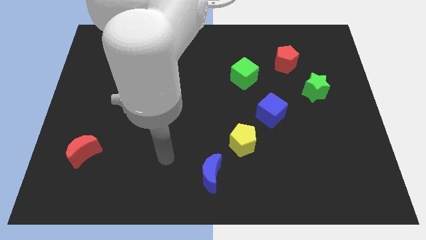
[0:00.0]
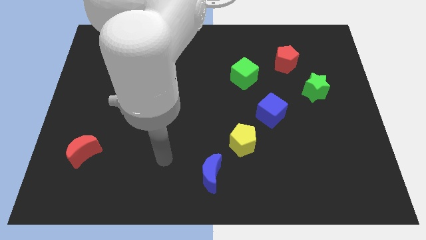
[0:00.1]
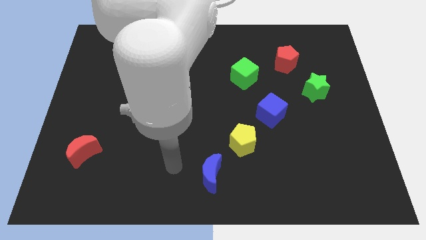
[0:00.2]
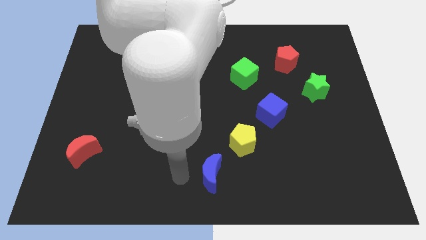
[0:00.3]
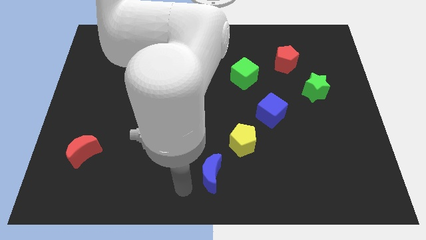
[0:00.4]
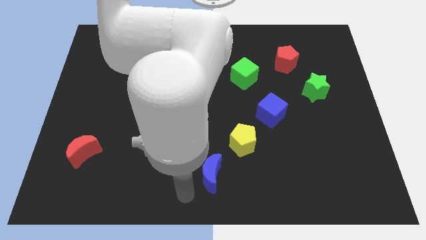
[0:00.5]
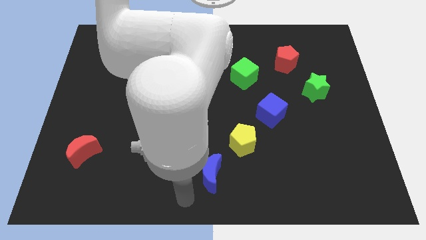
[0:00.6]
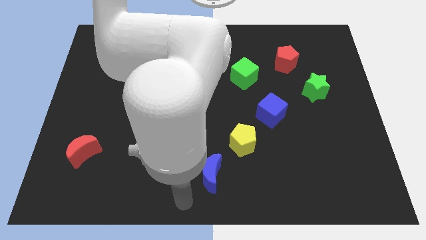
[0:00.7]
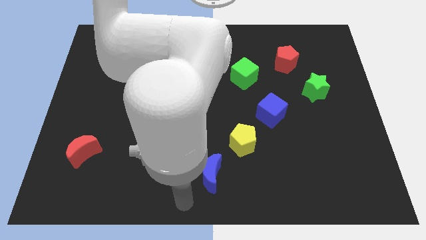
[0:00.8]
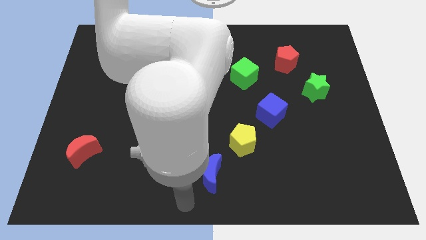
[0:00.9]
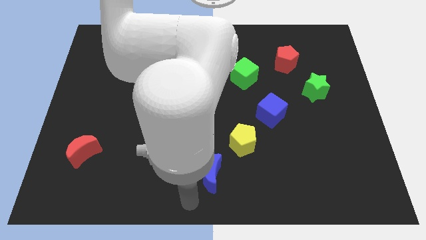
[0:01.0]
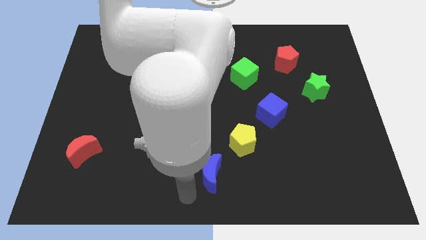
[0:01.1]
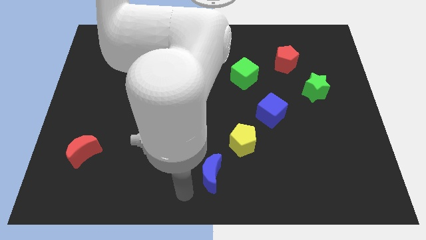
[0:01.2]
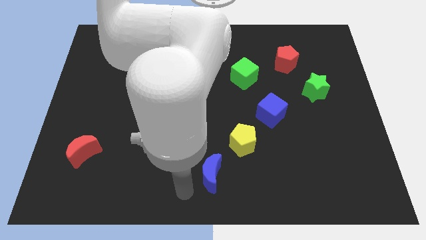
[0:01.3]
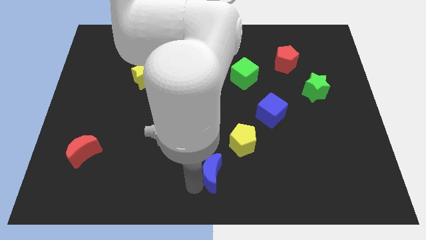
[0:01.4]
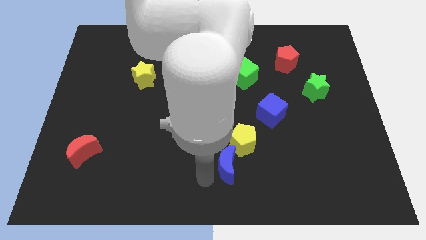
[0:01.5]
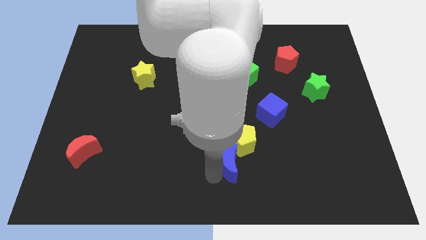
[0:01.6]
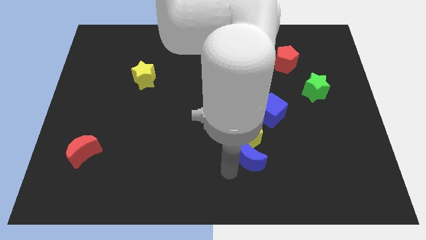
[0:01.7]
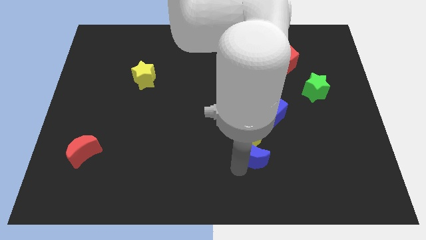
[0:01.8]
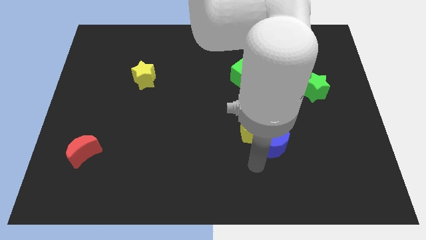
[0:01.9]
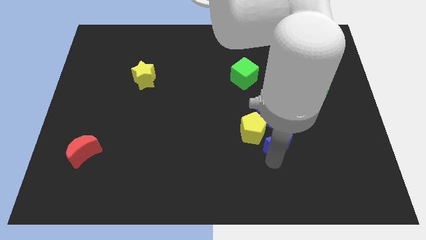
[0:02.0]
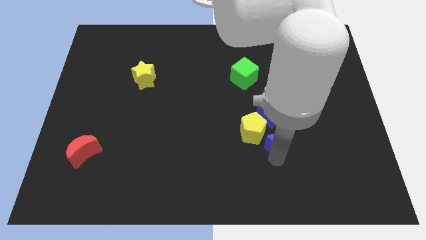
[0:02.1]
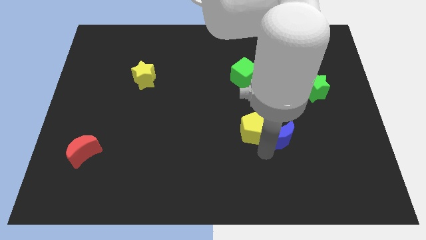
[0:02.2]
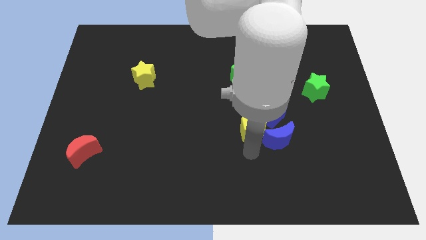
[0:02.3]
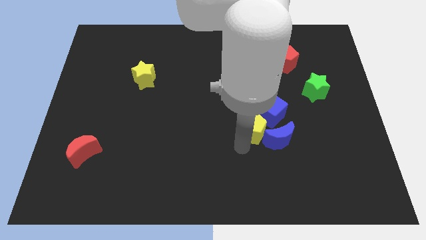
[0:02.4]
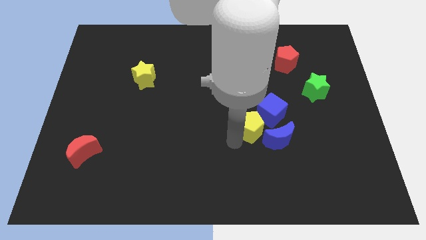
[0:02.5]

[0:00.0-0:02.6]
move the blue moon below the blue cube

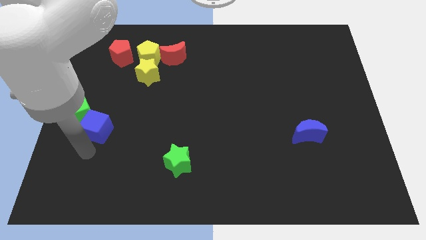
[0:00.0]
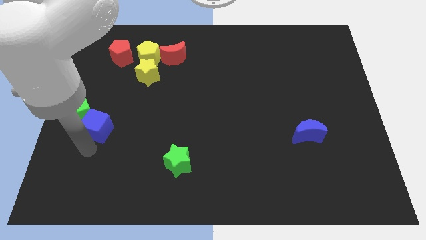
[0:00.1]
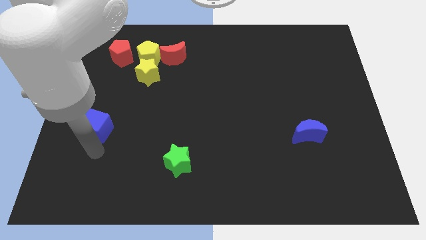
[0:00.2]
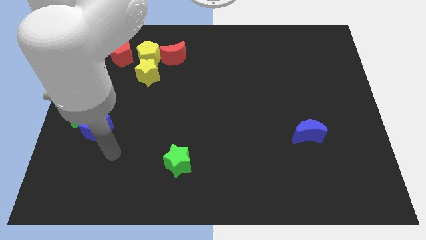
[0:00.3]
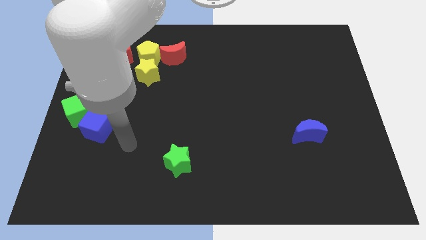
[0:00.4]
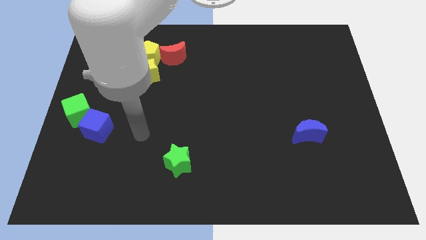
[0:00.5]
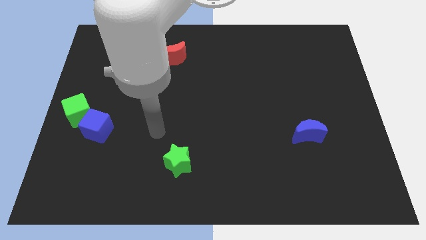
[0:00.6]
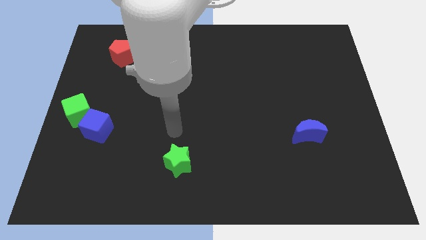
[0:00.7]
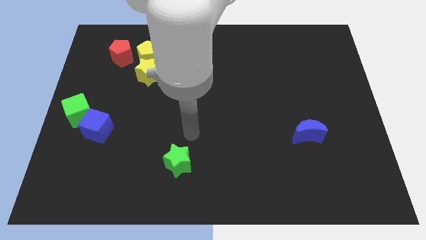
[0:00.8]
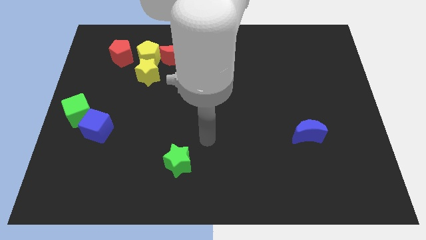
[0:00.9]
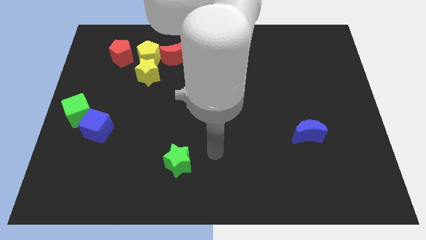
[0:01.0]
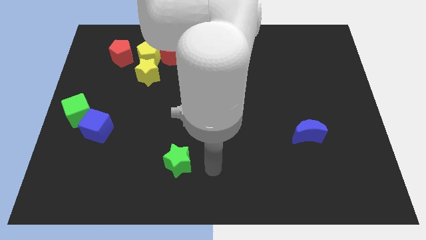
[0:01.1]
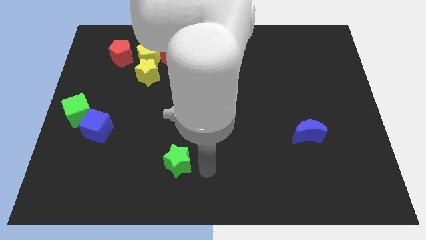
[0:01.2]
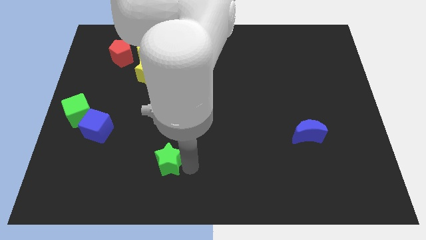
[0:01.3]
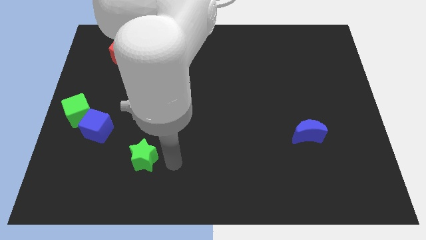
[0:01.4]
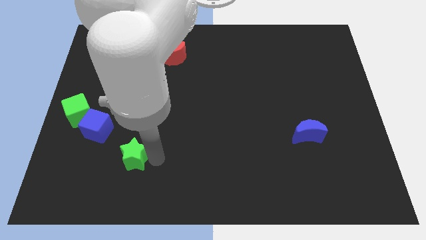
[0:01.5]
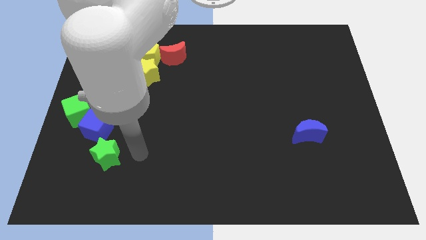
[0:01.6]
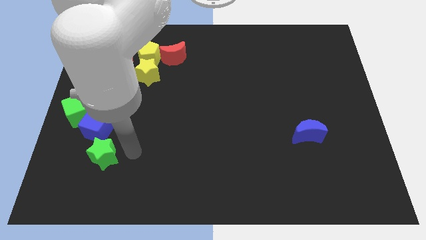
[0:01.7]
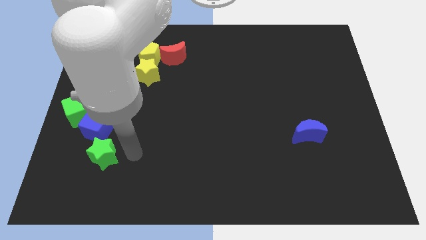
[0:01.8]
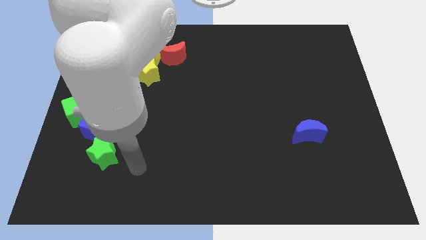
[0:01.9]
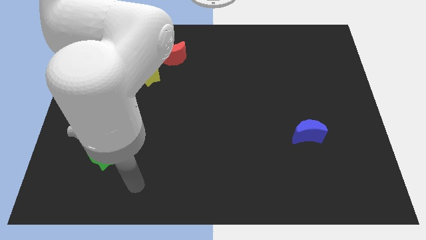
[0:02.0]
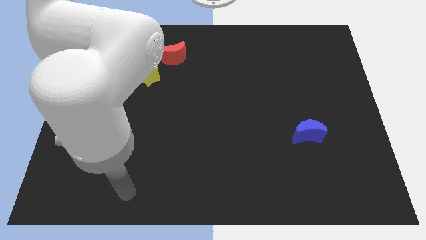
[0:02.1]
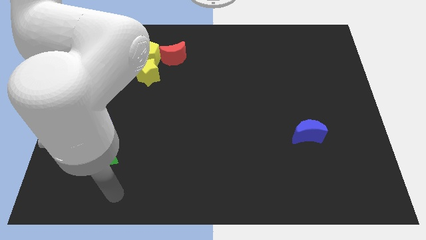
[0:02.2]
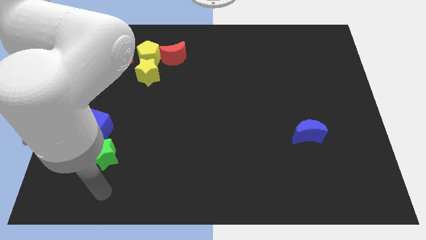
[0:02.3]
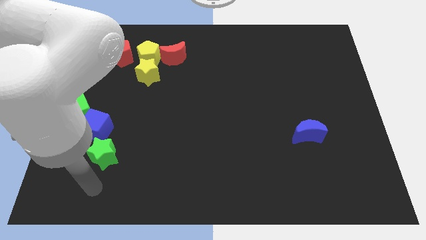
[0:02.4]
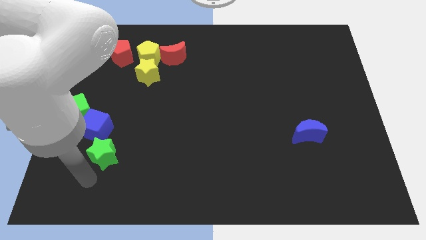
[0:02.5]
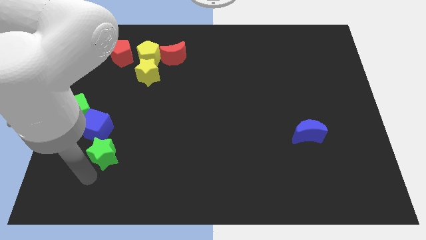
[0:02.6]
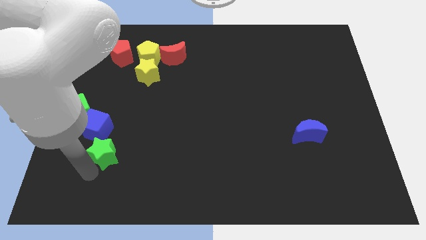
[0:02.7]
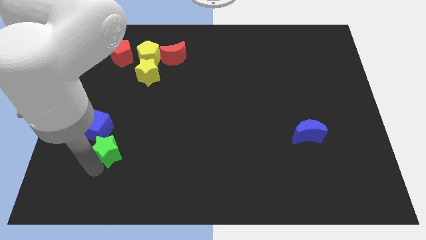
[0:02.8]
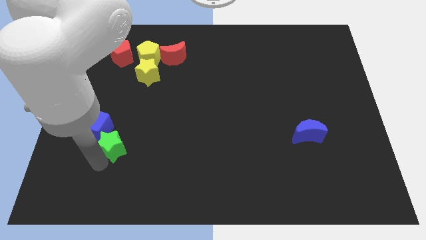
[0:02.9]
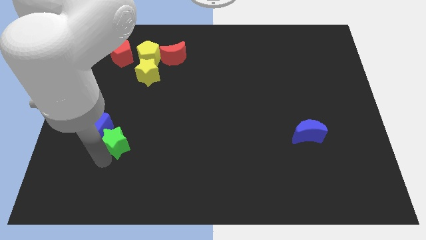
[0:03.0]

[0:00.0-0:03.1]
place the green star to the bottom right of the blue cube

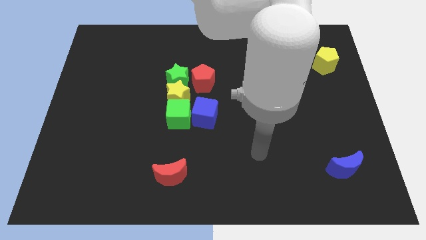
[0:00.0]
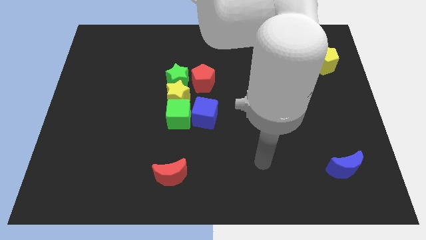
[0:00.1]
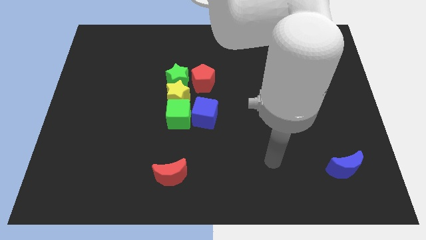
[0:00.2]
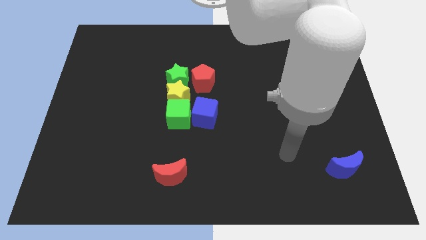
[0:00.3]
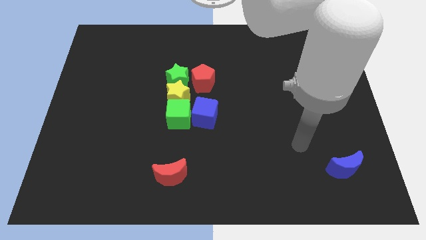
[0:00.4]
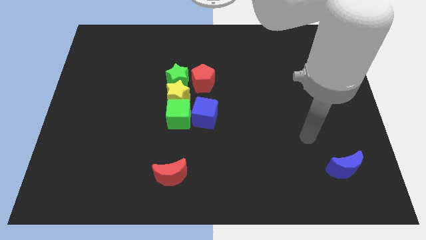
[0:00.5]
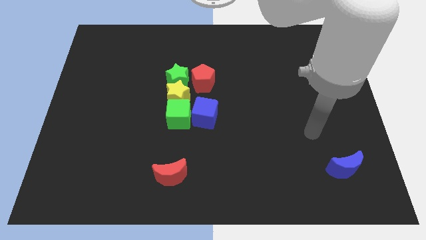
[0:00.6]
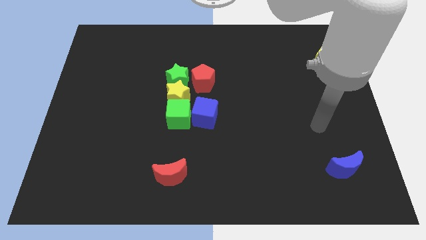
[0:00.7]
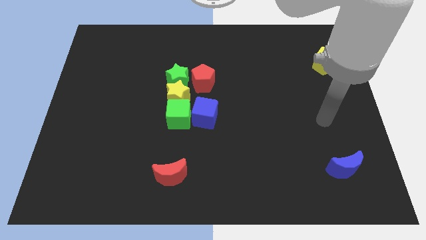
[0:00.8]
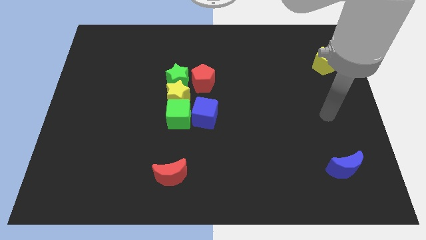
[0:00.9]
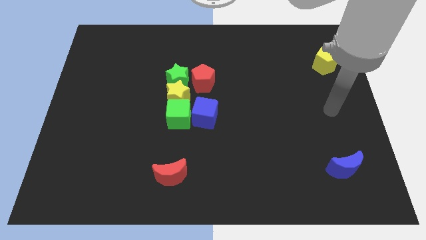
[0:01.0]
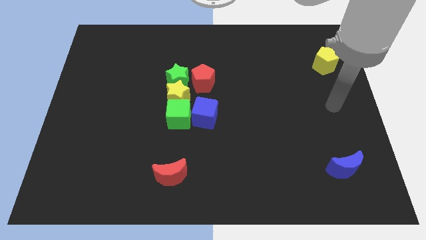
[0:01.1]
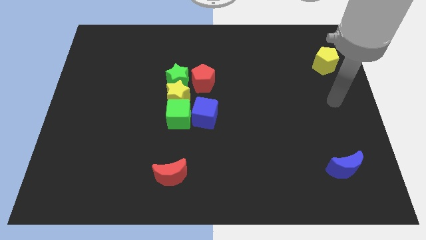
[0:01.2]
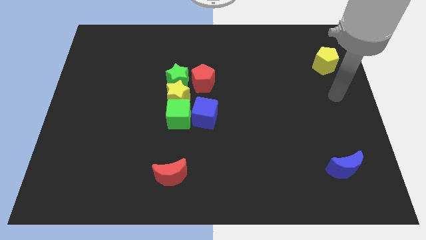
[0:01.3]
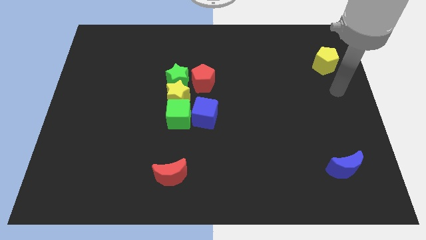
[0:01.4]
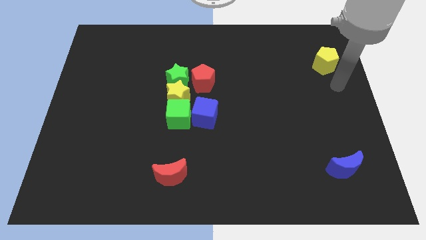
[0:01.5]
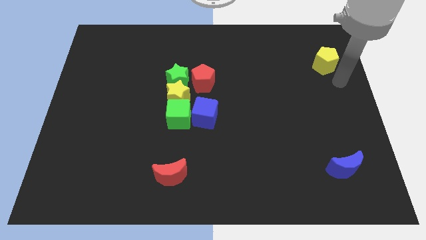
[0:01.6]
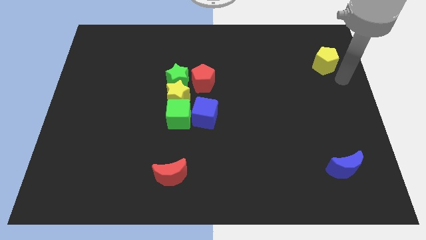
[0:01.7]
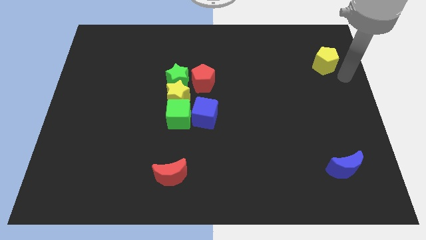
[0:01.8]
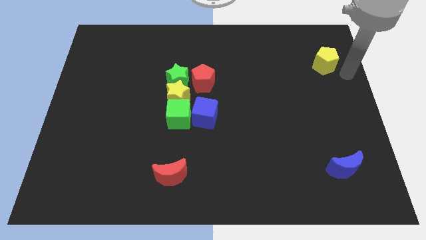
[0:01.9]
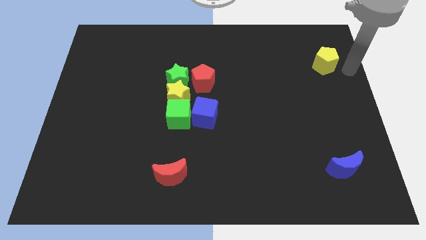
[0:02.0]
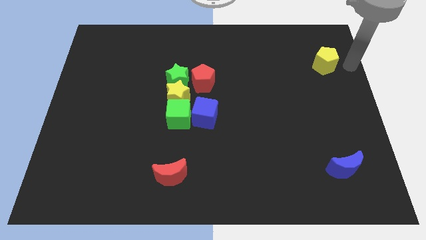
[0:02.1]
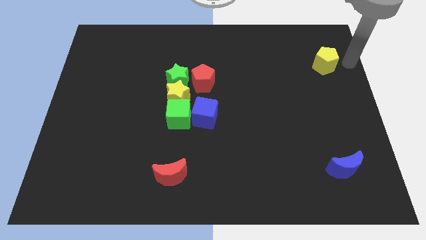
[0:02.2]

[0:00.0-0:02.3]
point your arm to the right of the yellow pentagon

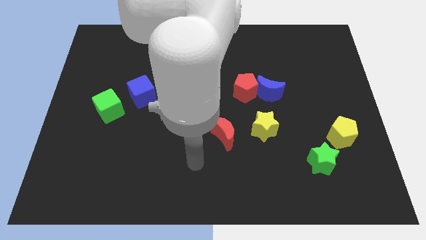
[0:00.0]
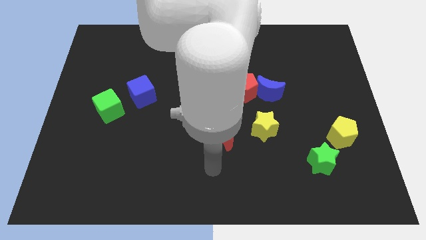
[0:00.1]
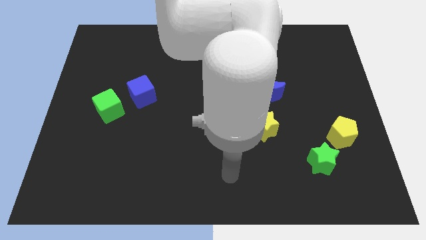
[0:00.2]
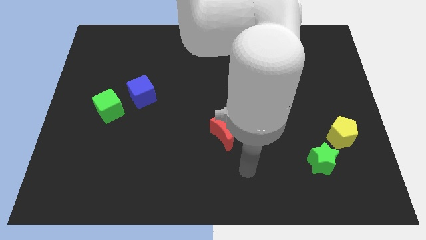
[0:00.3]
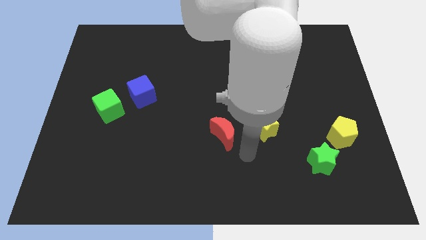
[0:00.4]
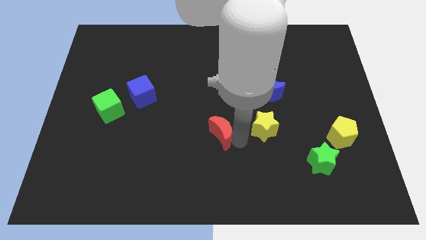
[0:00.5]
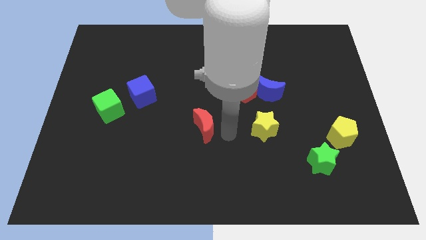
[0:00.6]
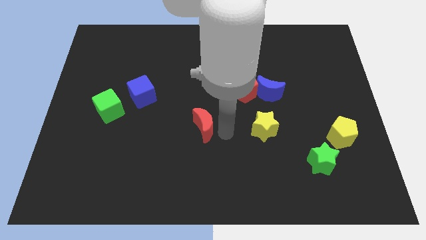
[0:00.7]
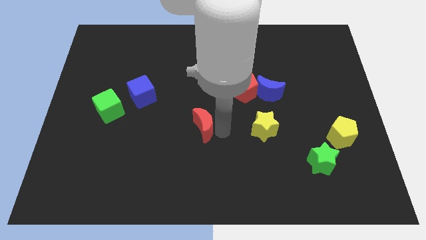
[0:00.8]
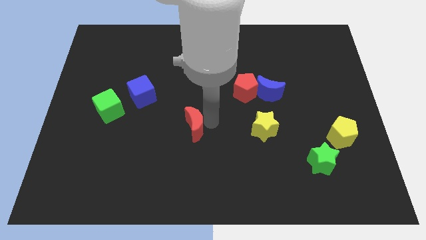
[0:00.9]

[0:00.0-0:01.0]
place the red moon diagonally bottom left to the red pentagon
